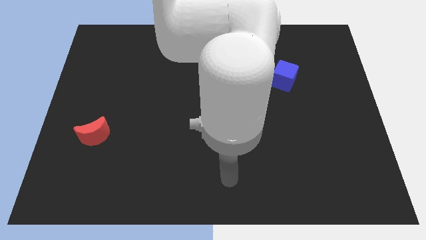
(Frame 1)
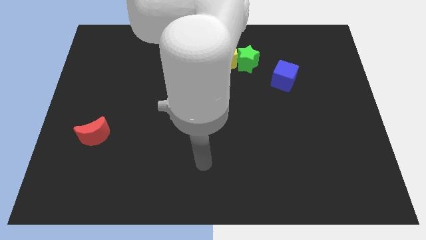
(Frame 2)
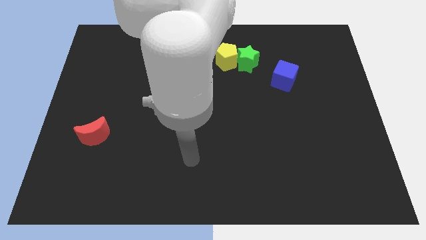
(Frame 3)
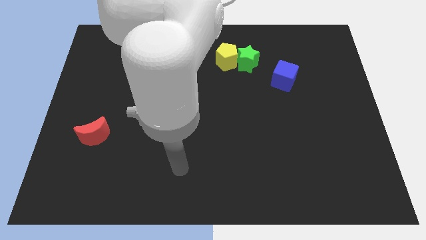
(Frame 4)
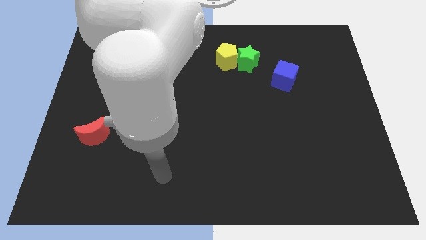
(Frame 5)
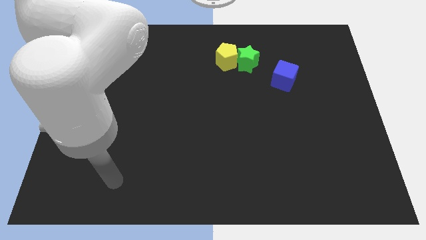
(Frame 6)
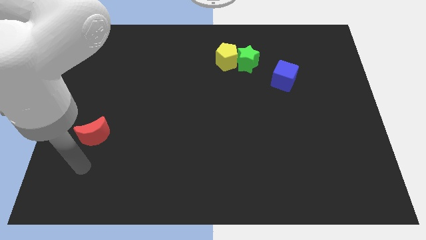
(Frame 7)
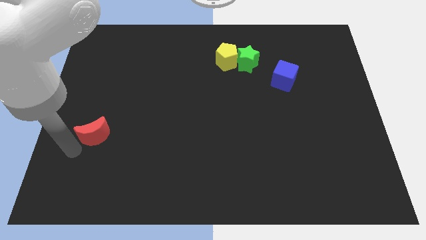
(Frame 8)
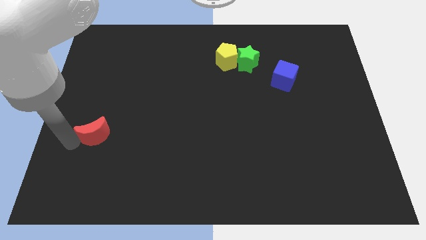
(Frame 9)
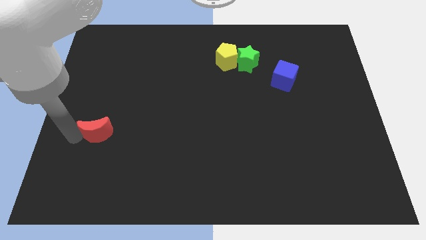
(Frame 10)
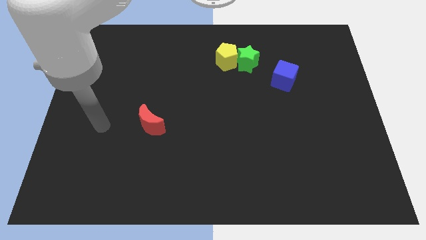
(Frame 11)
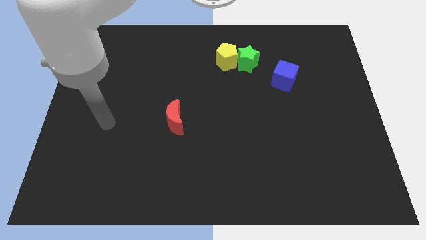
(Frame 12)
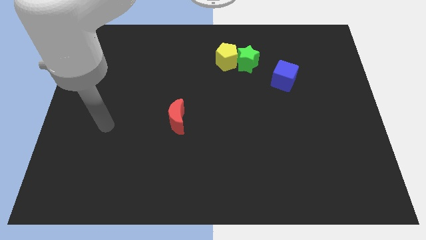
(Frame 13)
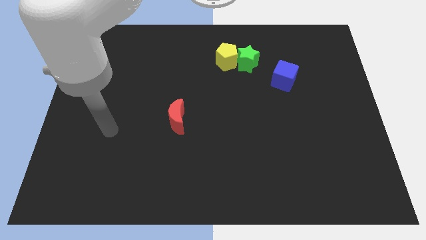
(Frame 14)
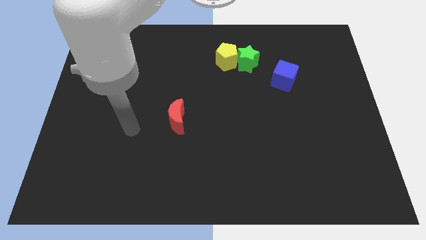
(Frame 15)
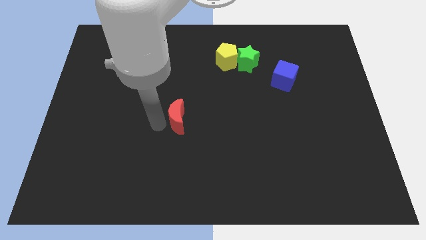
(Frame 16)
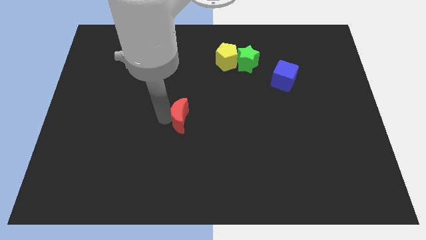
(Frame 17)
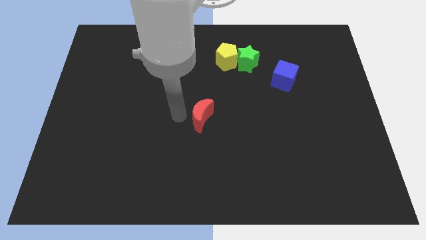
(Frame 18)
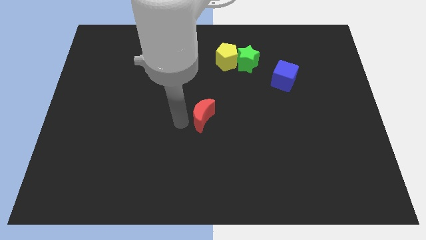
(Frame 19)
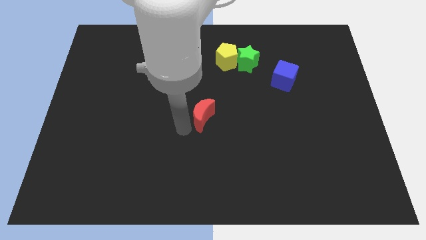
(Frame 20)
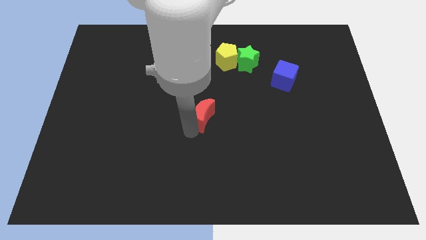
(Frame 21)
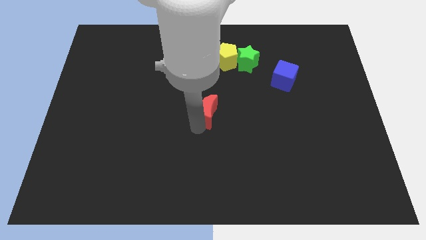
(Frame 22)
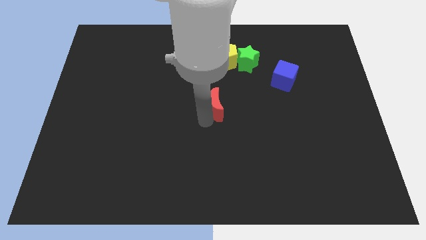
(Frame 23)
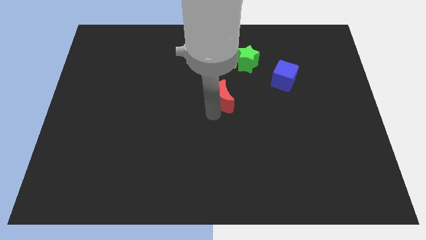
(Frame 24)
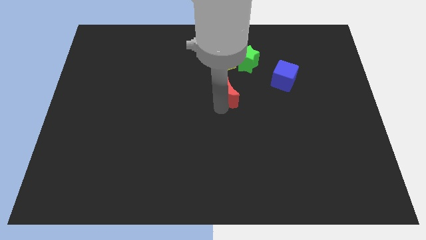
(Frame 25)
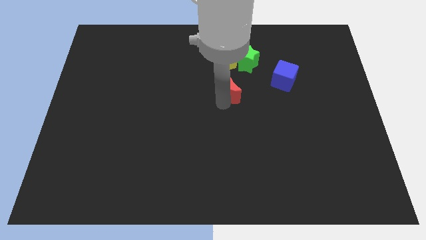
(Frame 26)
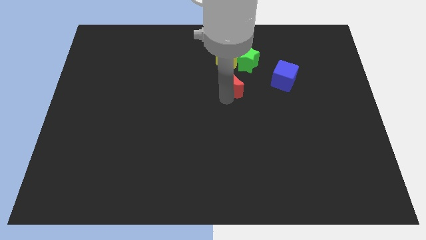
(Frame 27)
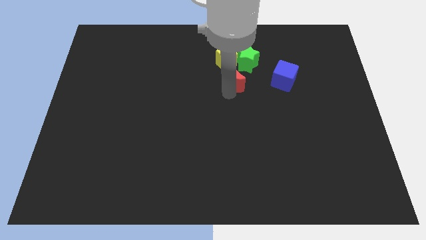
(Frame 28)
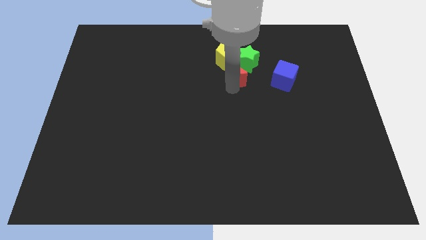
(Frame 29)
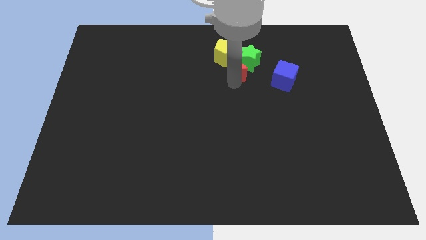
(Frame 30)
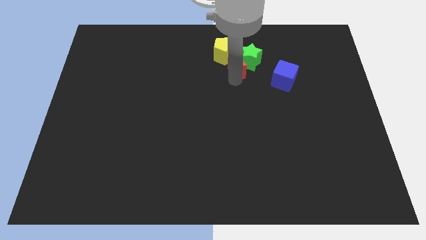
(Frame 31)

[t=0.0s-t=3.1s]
push the red block to the green star

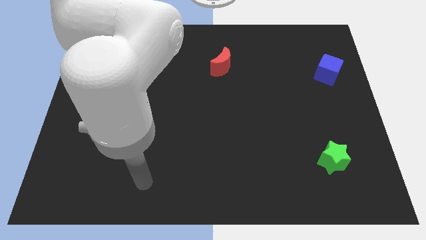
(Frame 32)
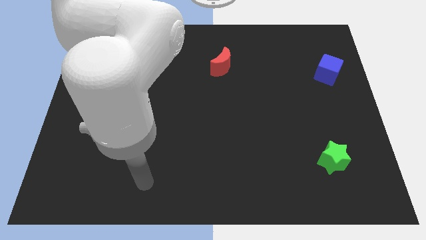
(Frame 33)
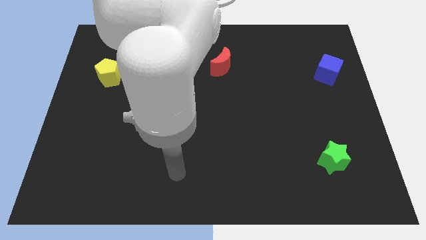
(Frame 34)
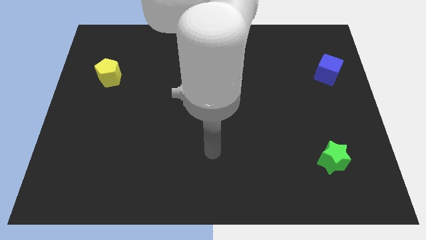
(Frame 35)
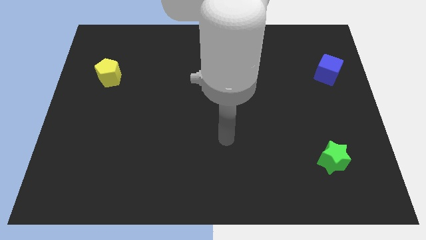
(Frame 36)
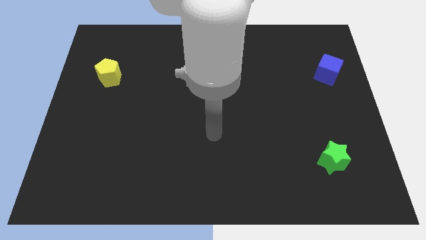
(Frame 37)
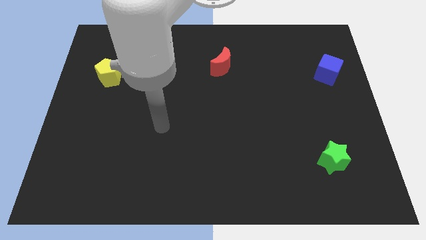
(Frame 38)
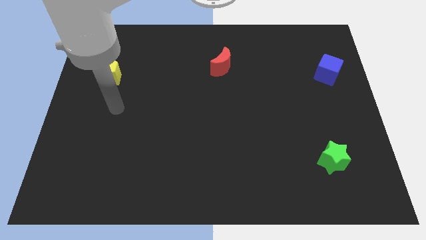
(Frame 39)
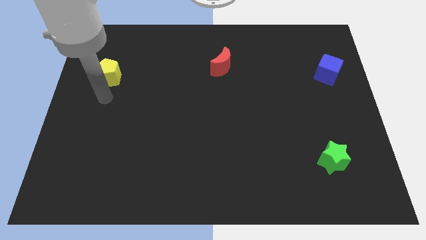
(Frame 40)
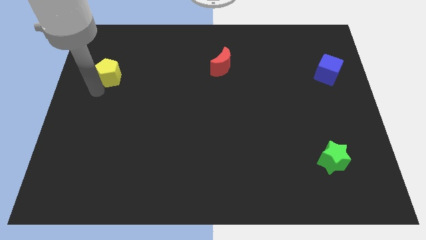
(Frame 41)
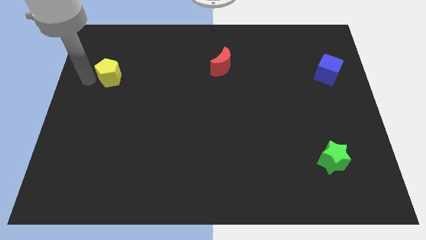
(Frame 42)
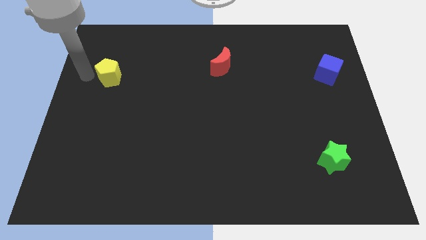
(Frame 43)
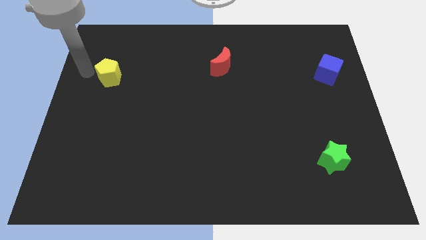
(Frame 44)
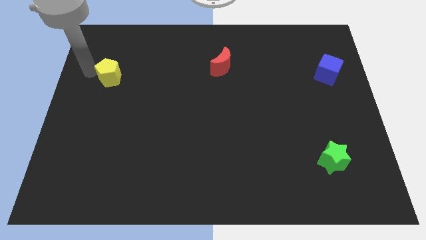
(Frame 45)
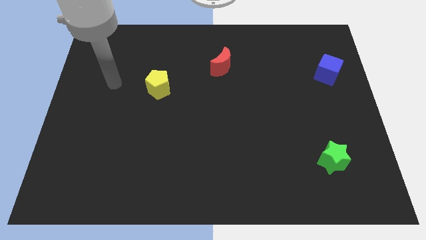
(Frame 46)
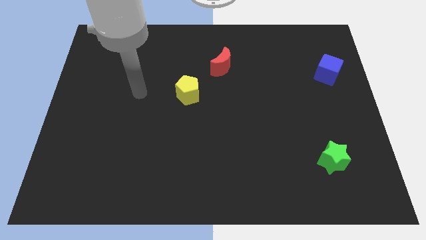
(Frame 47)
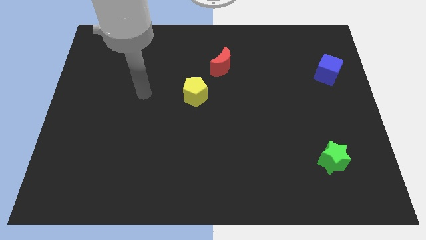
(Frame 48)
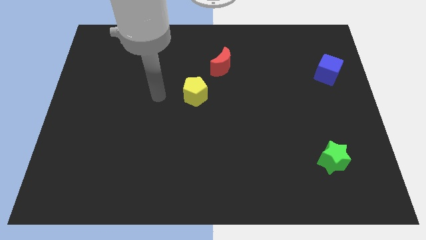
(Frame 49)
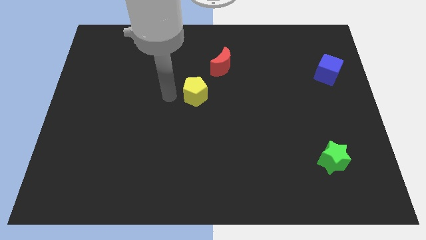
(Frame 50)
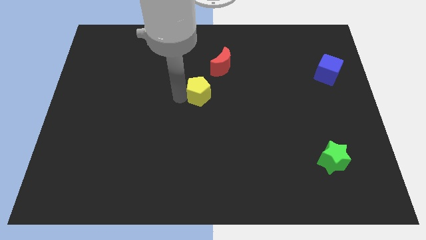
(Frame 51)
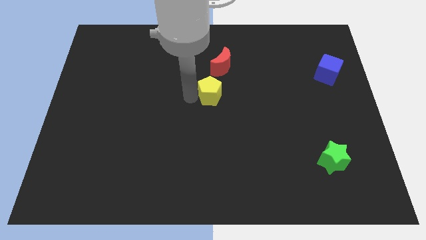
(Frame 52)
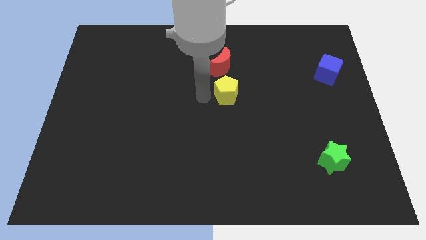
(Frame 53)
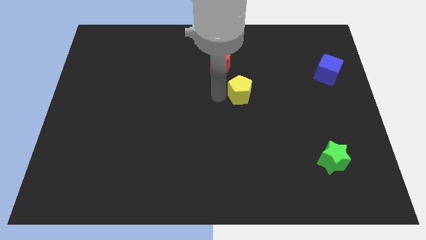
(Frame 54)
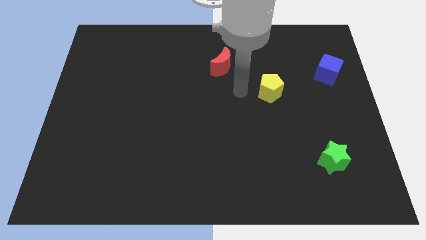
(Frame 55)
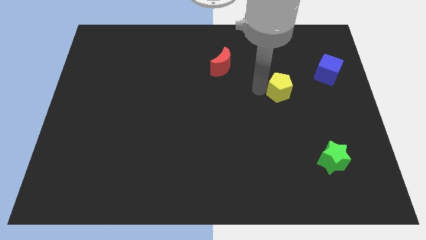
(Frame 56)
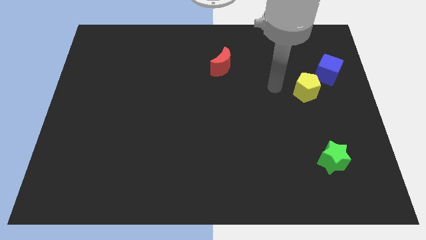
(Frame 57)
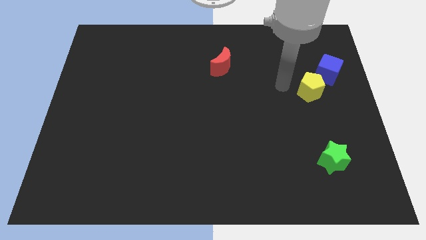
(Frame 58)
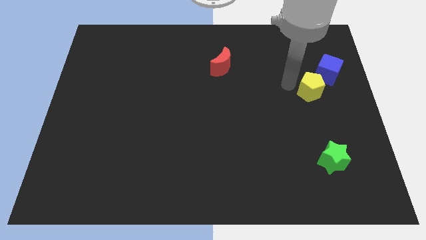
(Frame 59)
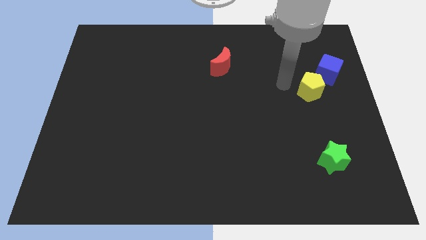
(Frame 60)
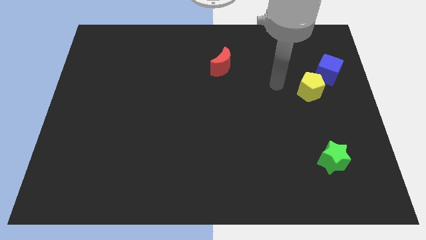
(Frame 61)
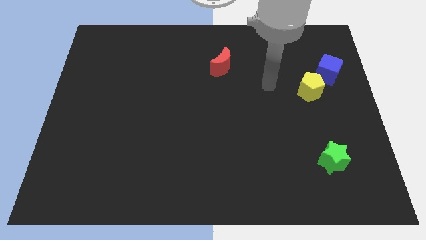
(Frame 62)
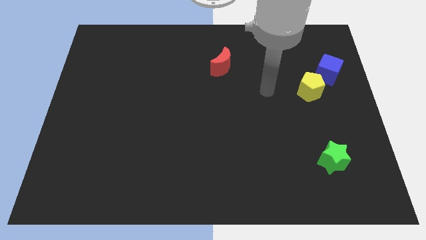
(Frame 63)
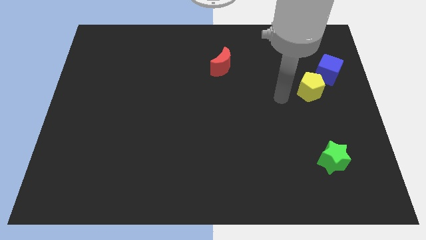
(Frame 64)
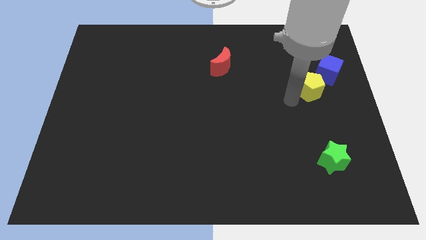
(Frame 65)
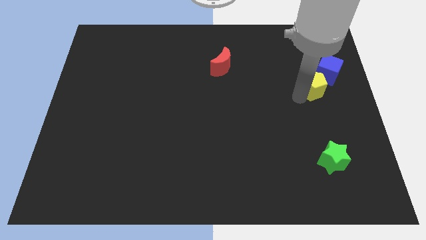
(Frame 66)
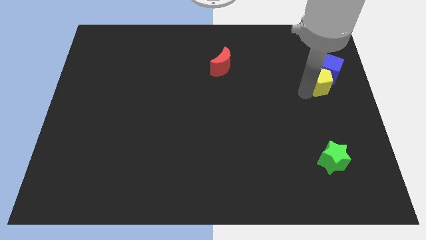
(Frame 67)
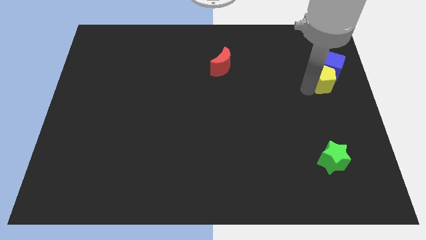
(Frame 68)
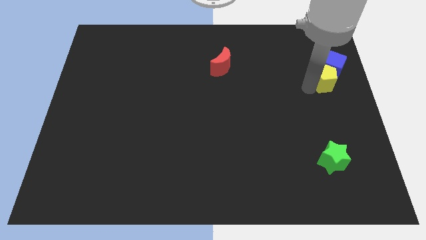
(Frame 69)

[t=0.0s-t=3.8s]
slide the yellow block next to the blue cube

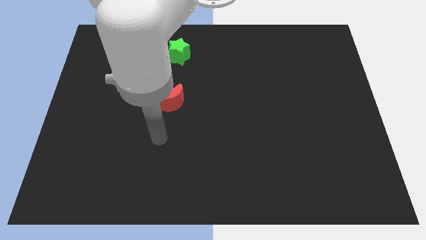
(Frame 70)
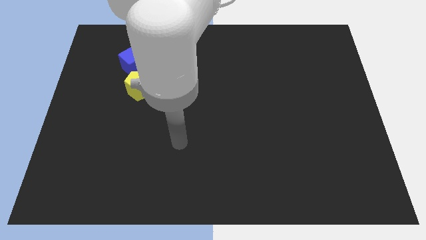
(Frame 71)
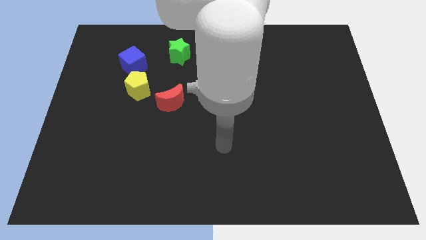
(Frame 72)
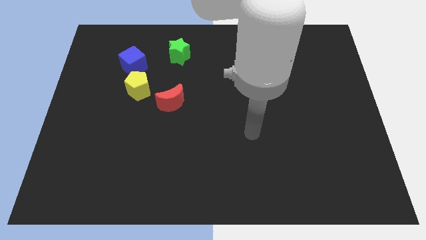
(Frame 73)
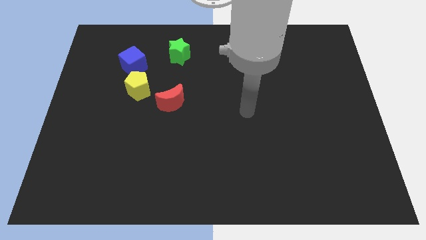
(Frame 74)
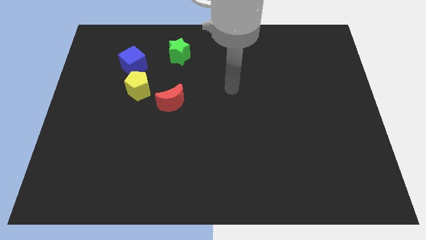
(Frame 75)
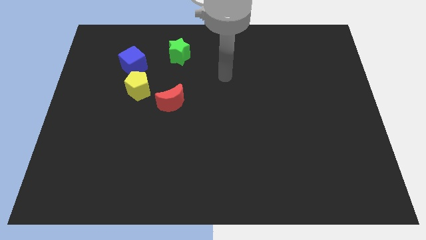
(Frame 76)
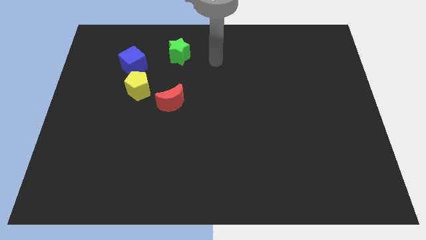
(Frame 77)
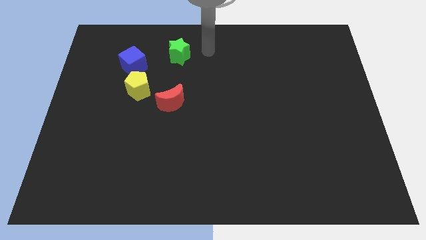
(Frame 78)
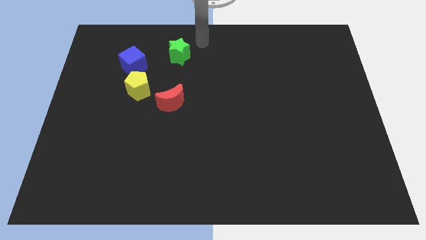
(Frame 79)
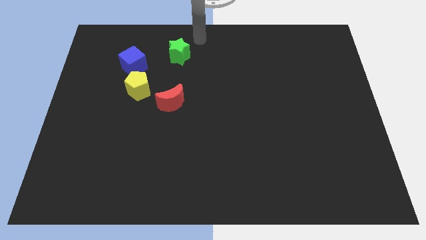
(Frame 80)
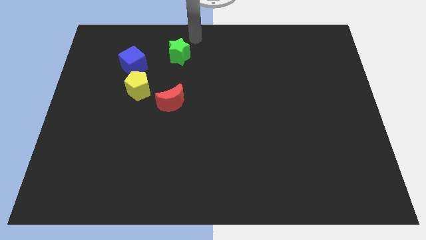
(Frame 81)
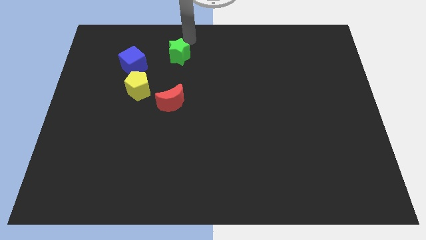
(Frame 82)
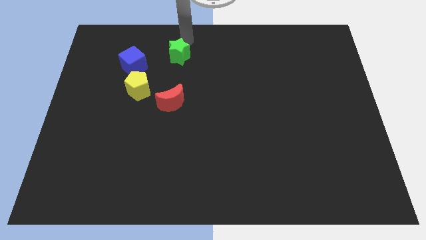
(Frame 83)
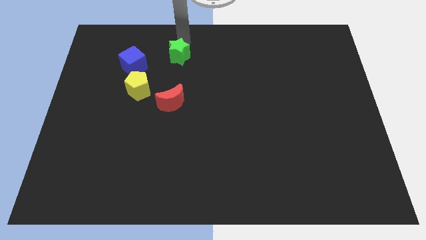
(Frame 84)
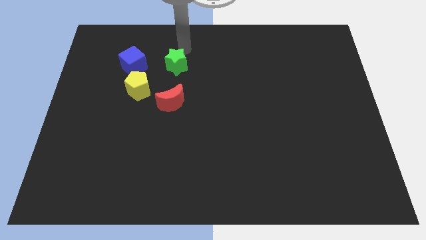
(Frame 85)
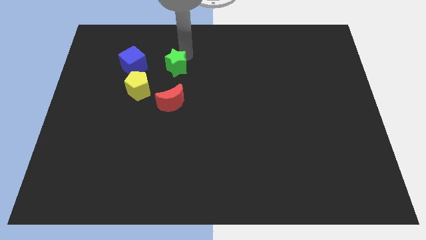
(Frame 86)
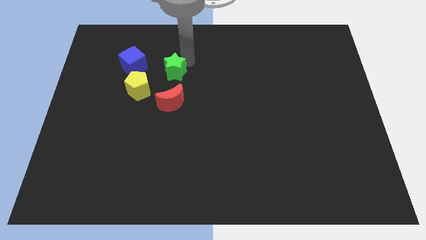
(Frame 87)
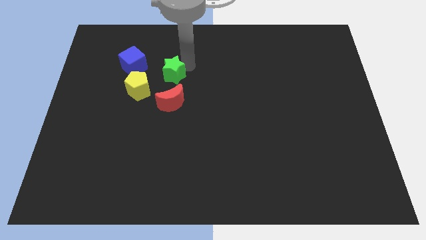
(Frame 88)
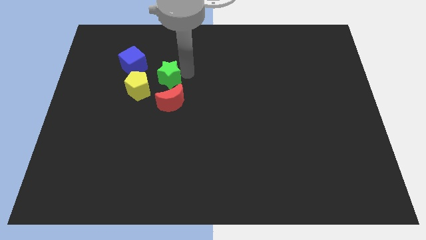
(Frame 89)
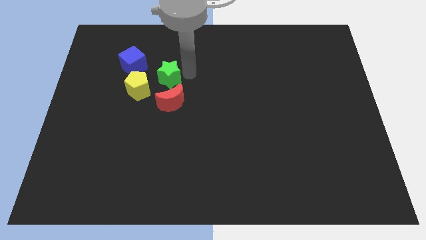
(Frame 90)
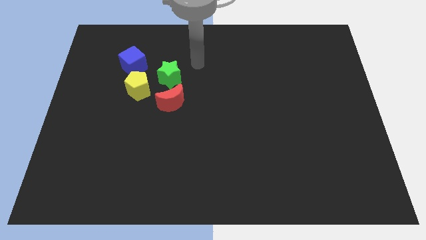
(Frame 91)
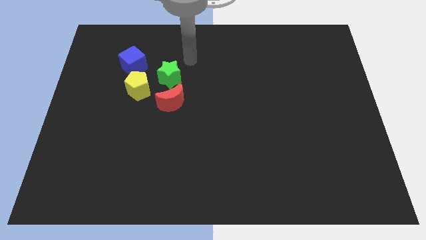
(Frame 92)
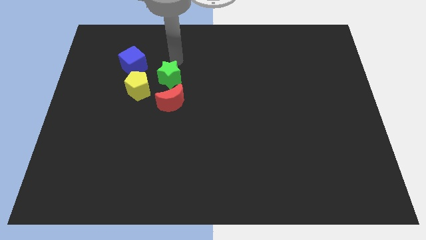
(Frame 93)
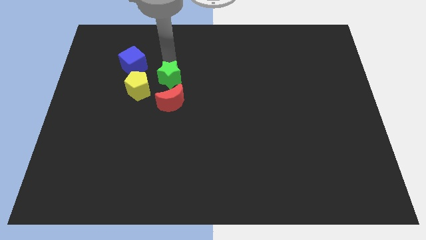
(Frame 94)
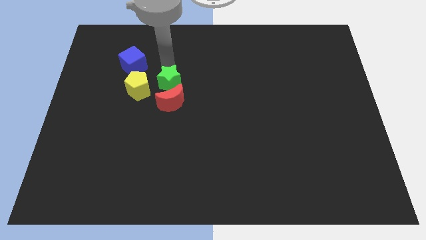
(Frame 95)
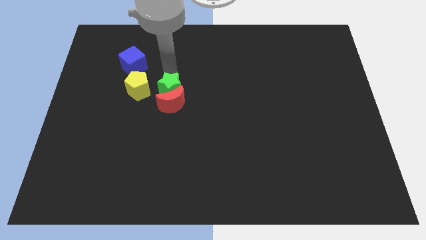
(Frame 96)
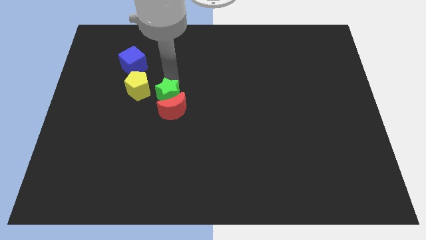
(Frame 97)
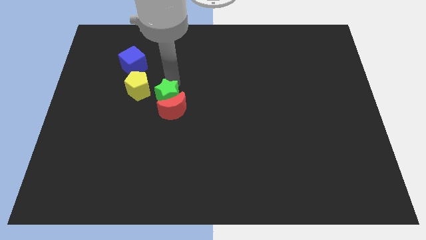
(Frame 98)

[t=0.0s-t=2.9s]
put the green block towards the red moon
